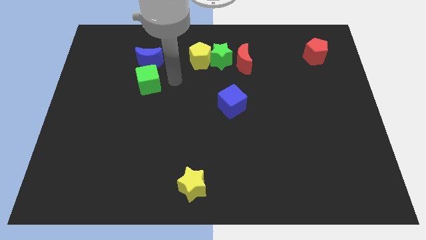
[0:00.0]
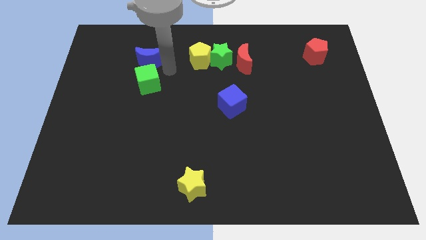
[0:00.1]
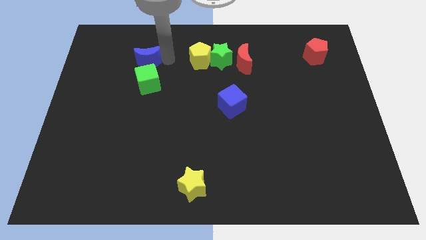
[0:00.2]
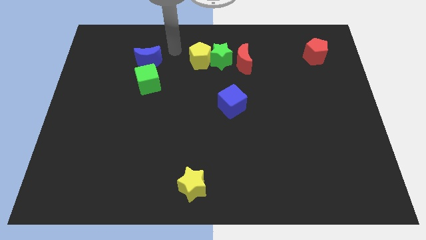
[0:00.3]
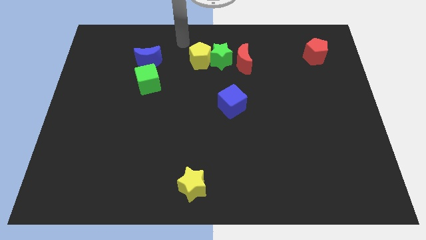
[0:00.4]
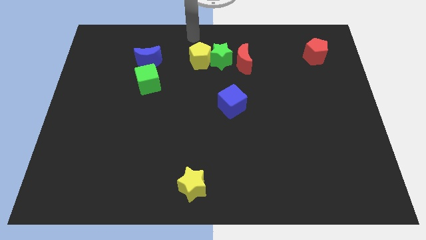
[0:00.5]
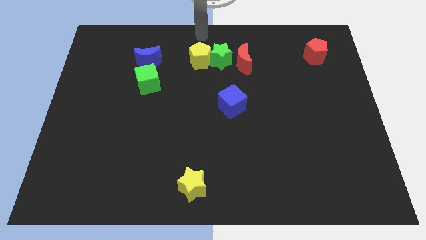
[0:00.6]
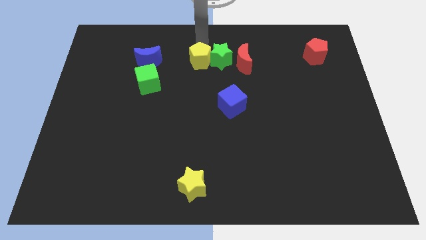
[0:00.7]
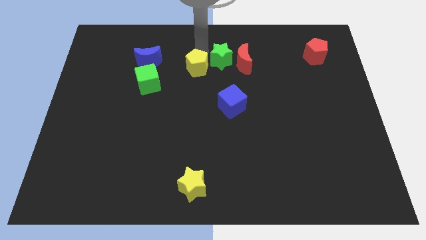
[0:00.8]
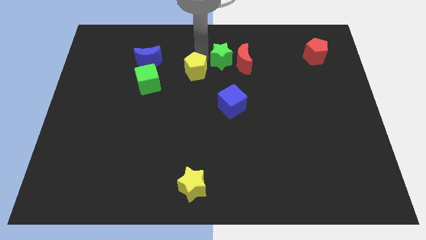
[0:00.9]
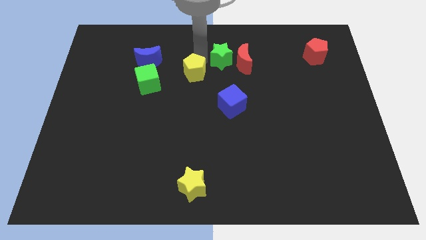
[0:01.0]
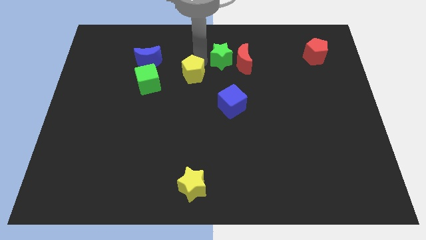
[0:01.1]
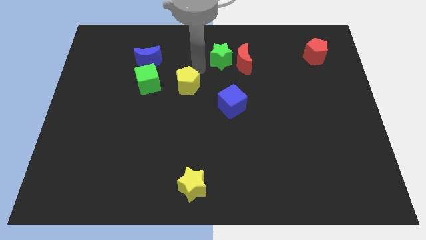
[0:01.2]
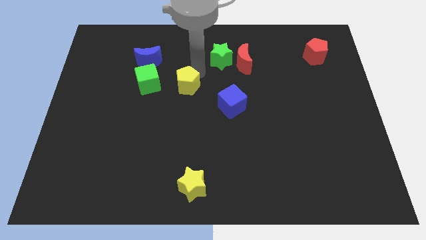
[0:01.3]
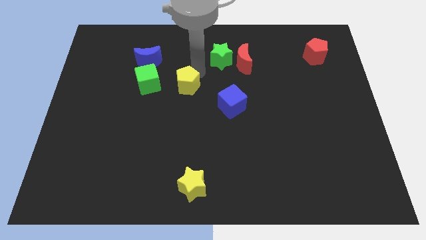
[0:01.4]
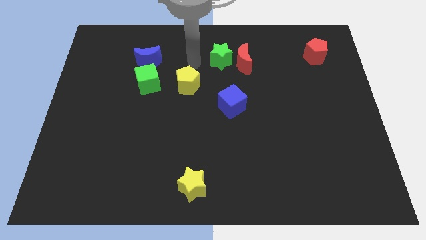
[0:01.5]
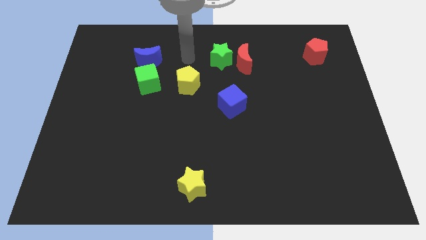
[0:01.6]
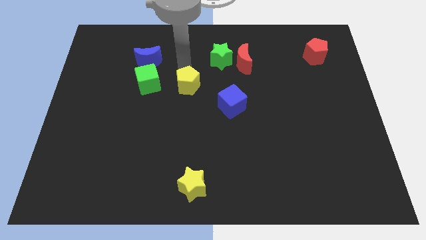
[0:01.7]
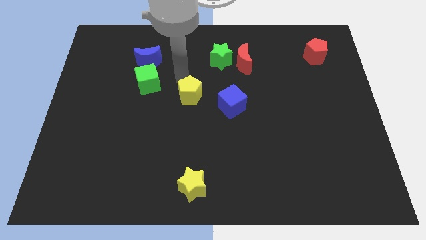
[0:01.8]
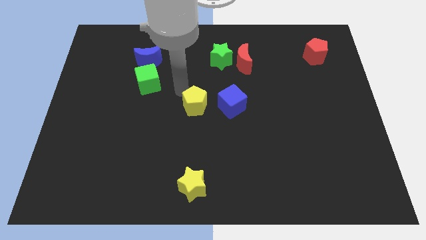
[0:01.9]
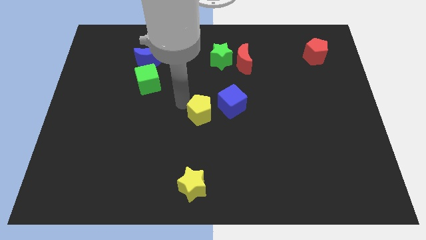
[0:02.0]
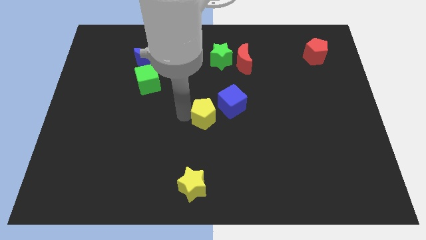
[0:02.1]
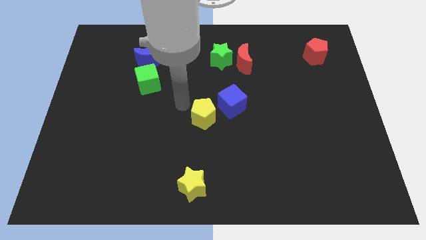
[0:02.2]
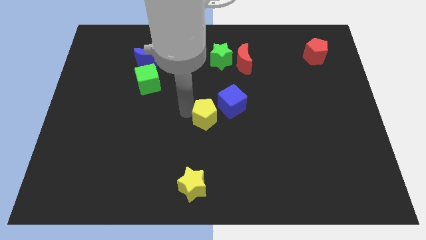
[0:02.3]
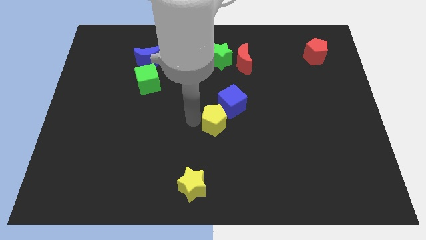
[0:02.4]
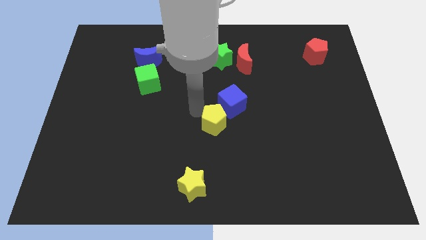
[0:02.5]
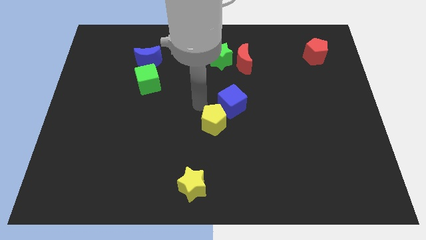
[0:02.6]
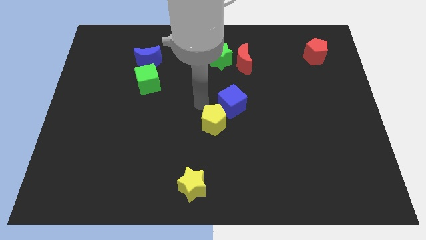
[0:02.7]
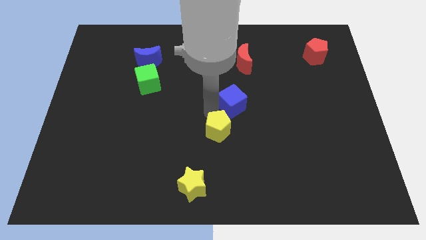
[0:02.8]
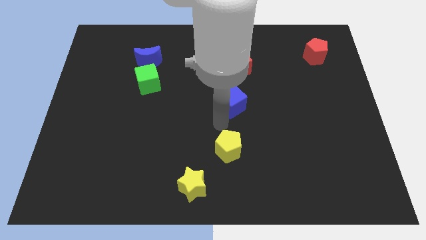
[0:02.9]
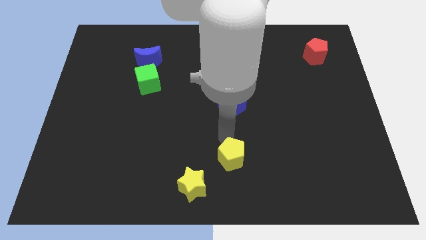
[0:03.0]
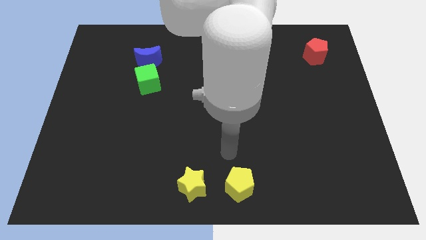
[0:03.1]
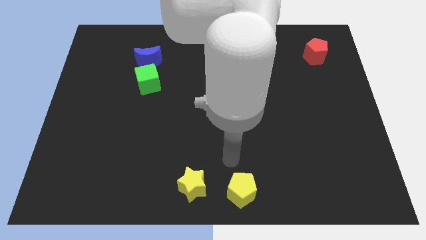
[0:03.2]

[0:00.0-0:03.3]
move the yellow pentagon to the right of the yellow star

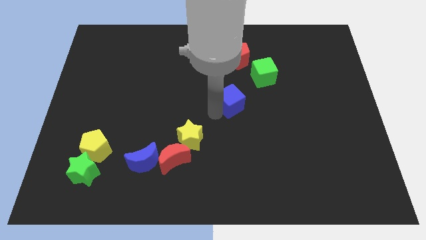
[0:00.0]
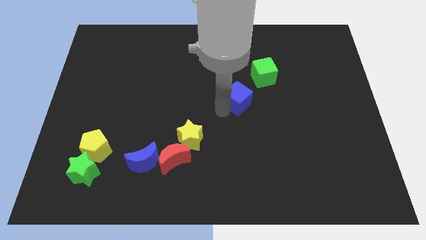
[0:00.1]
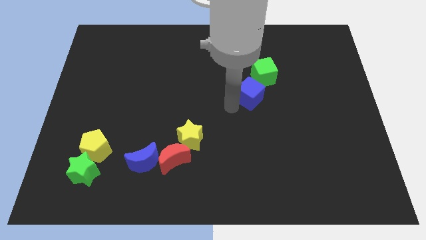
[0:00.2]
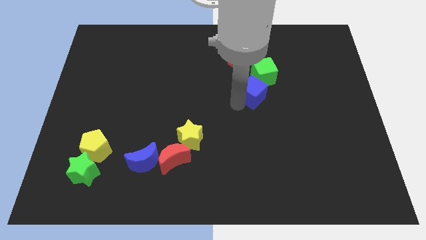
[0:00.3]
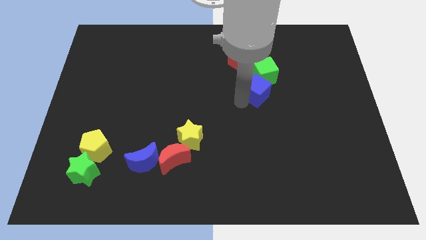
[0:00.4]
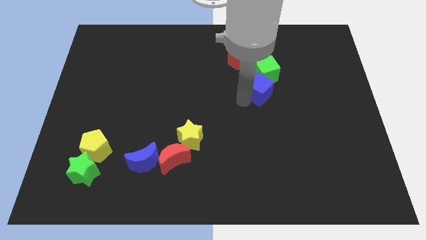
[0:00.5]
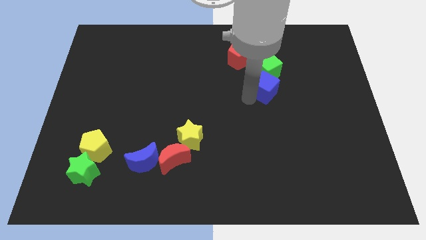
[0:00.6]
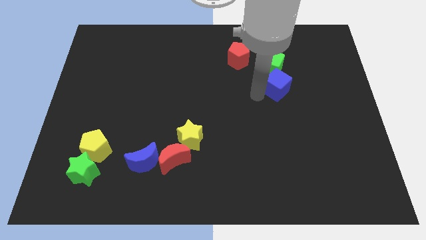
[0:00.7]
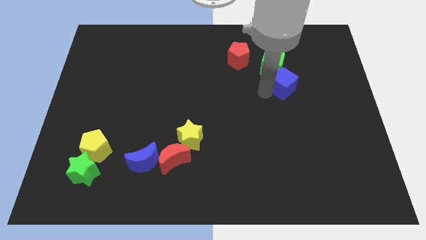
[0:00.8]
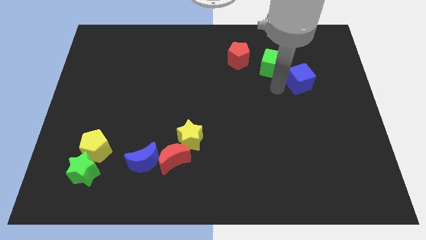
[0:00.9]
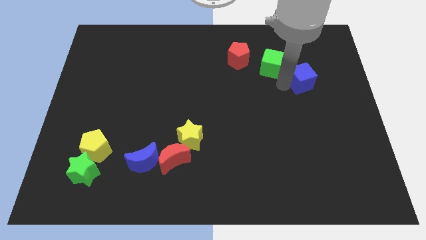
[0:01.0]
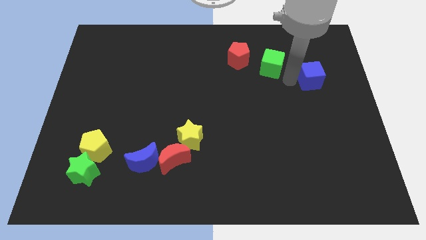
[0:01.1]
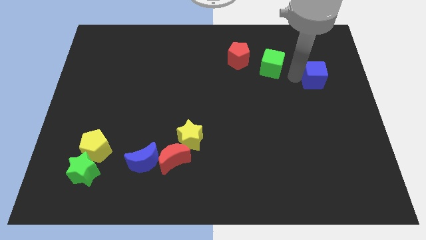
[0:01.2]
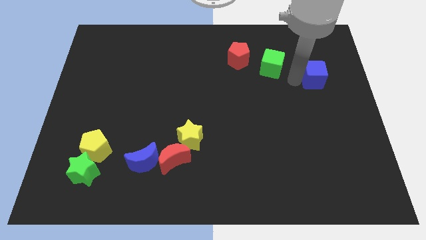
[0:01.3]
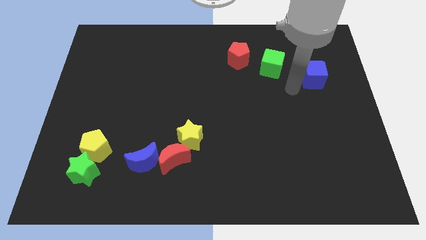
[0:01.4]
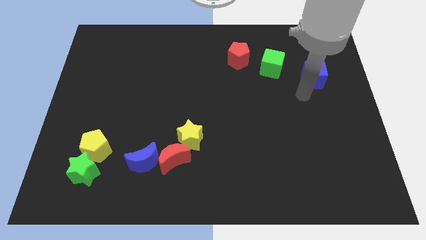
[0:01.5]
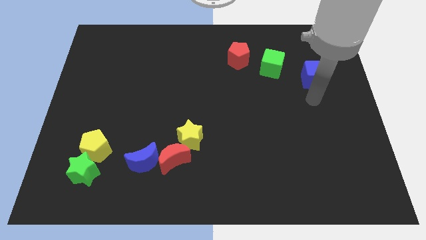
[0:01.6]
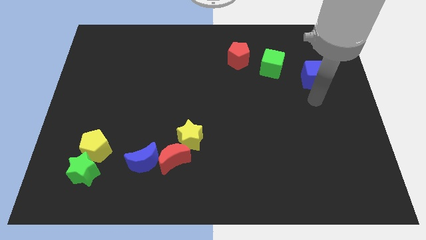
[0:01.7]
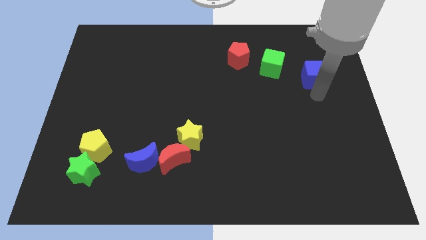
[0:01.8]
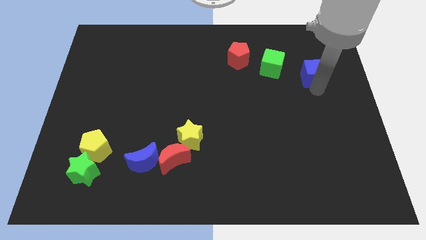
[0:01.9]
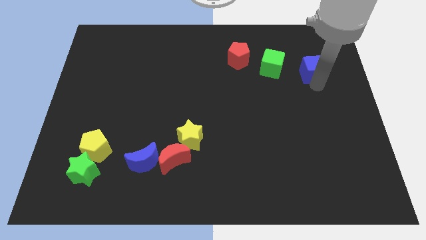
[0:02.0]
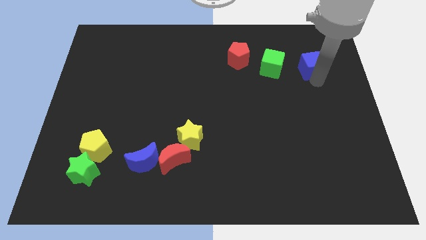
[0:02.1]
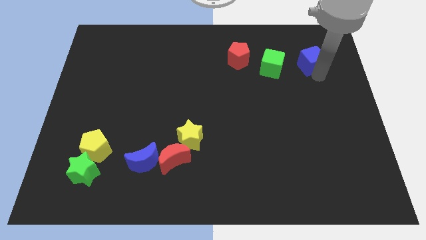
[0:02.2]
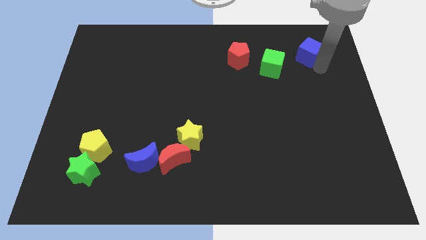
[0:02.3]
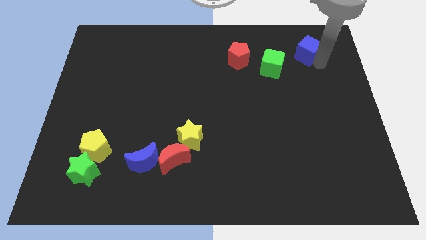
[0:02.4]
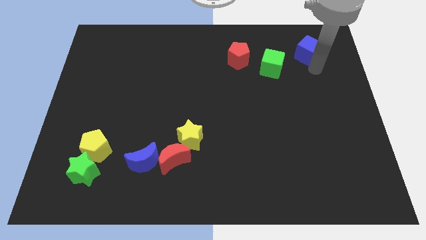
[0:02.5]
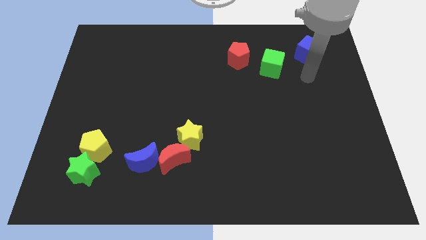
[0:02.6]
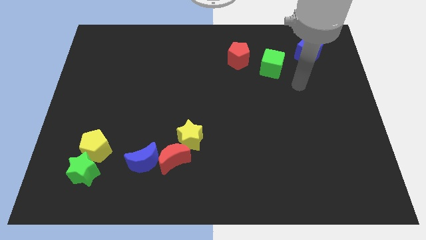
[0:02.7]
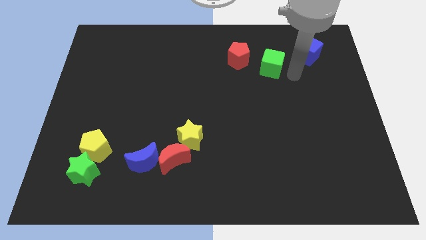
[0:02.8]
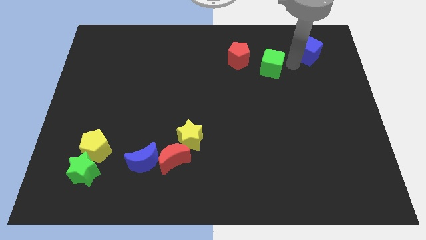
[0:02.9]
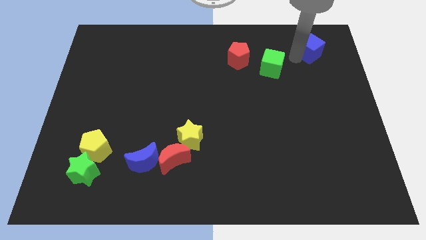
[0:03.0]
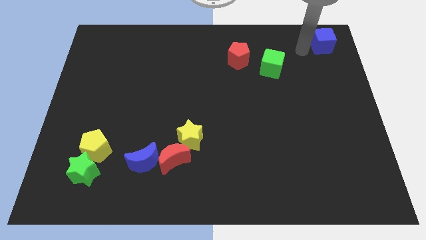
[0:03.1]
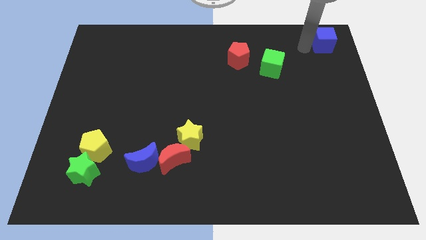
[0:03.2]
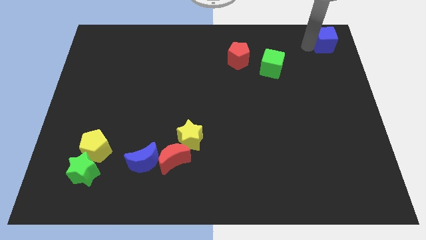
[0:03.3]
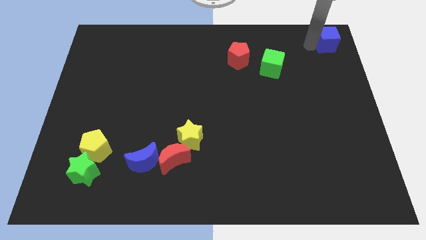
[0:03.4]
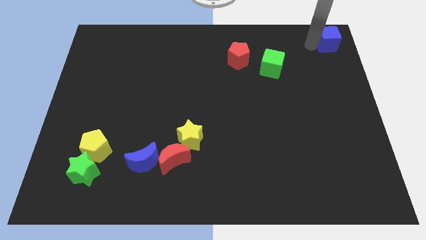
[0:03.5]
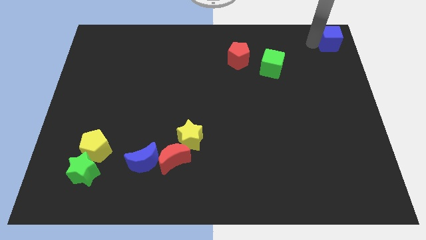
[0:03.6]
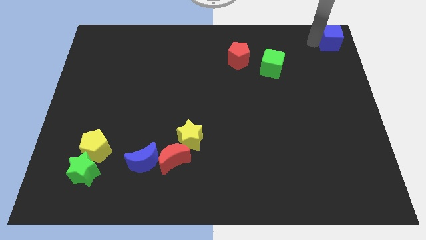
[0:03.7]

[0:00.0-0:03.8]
slide the blue cube to the top right of the table

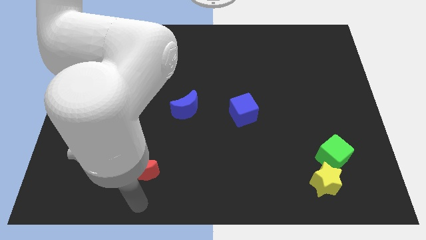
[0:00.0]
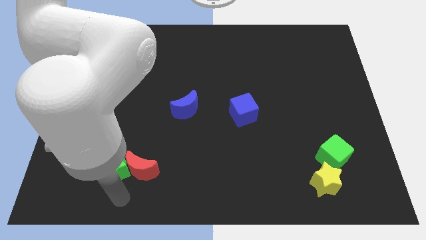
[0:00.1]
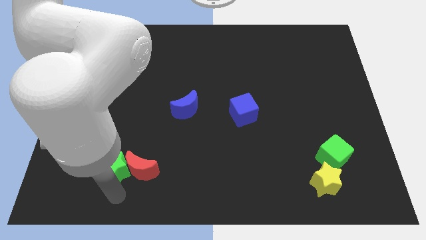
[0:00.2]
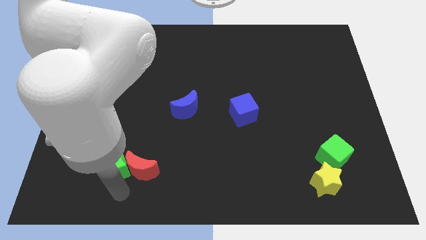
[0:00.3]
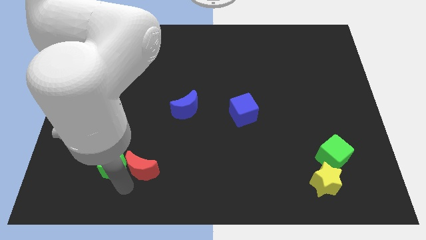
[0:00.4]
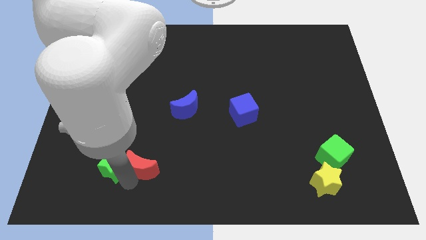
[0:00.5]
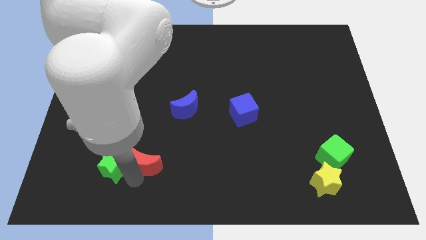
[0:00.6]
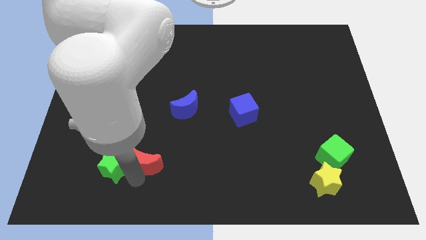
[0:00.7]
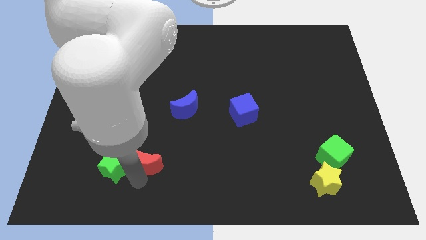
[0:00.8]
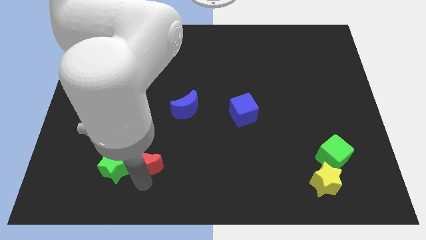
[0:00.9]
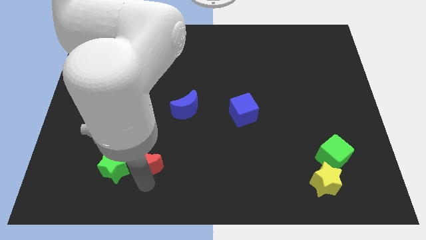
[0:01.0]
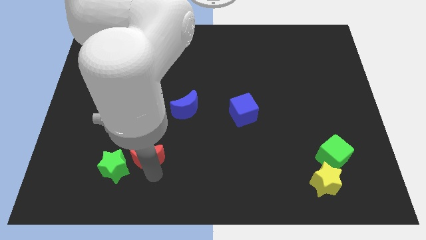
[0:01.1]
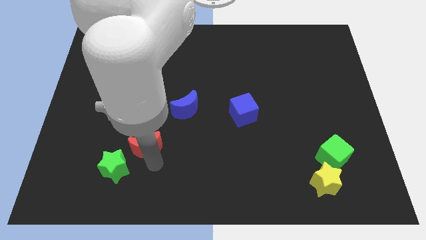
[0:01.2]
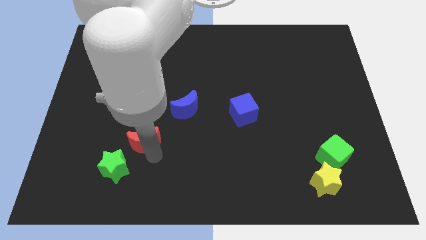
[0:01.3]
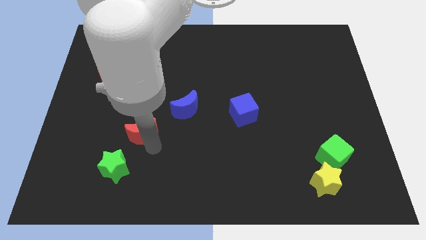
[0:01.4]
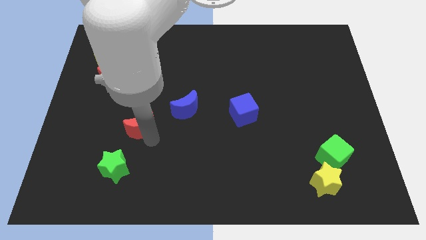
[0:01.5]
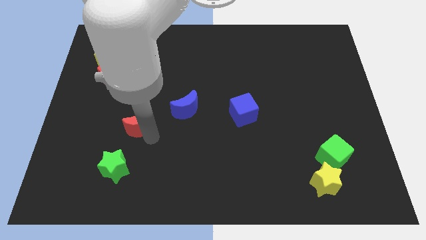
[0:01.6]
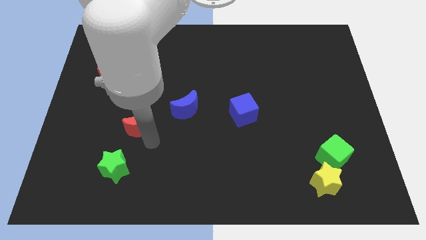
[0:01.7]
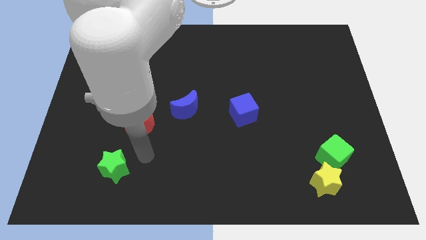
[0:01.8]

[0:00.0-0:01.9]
move the red crescent away from the green star
